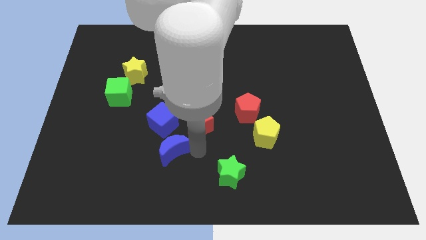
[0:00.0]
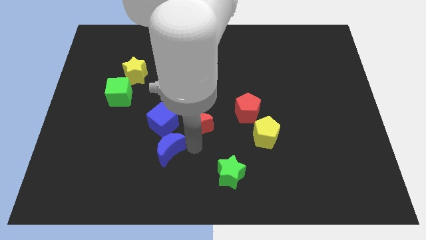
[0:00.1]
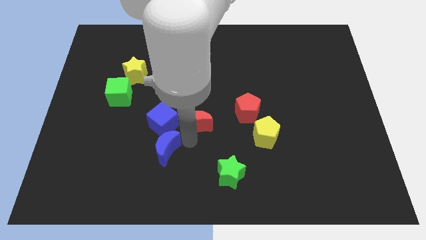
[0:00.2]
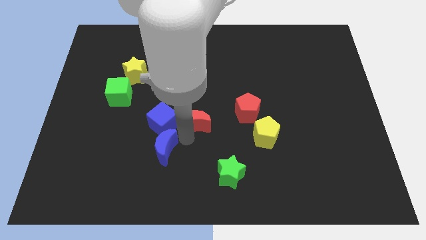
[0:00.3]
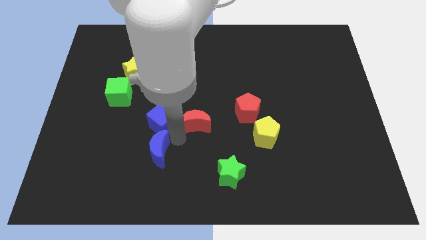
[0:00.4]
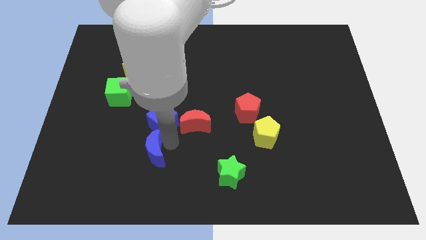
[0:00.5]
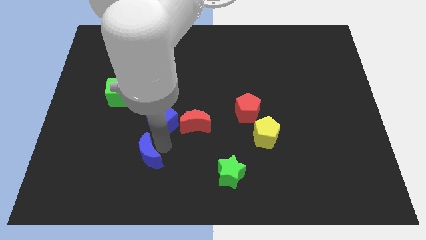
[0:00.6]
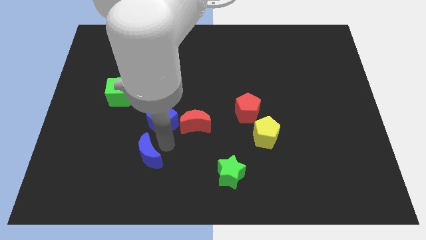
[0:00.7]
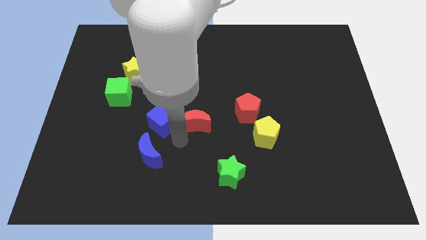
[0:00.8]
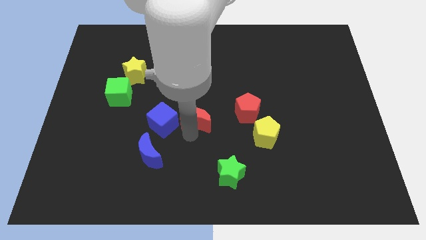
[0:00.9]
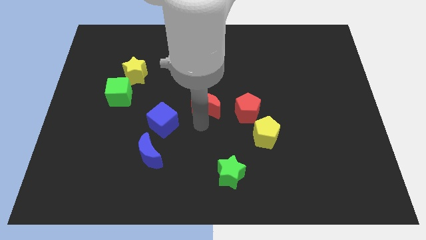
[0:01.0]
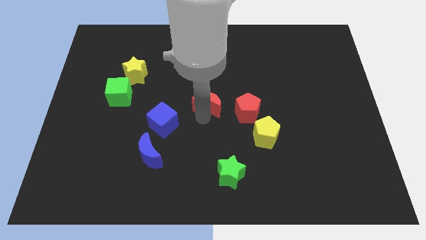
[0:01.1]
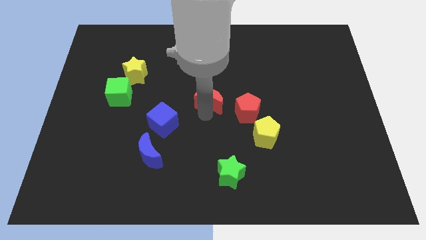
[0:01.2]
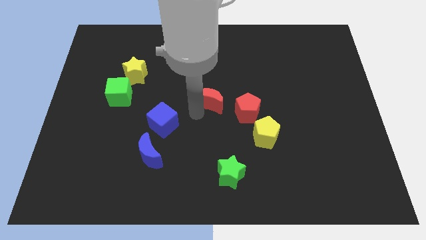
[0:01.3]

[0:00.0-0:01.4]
separate the crescents

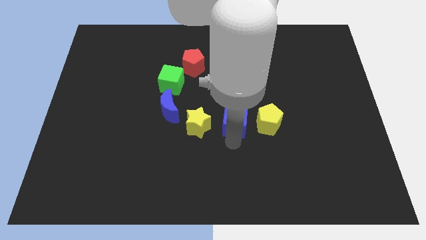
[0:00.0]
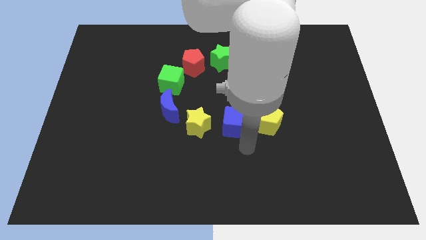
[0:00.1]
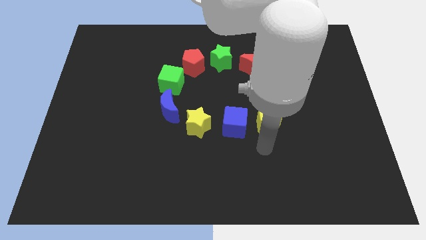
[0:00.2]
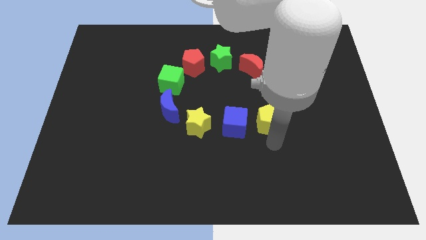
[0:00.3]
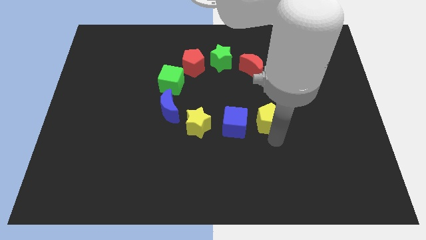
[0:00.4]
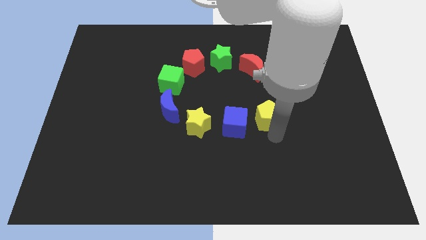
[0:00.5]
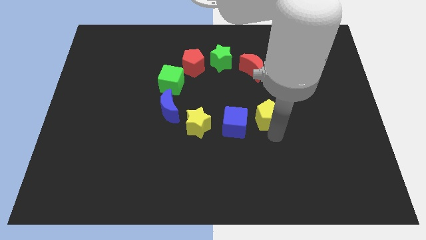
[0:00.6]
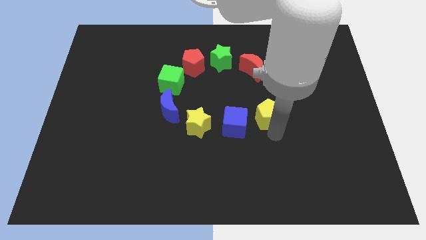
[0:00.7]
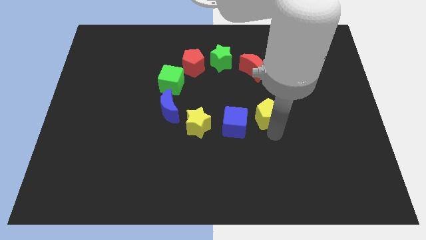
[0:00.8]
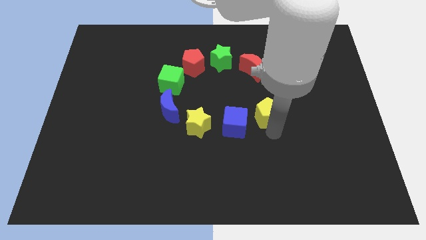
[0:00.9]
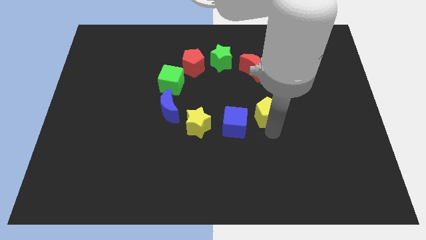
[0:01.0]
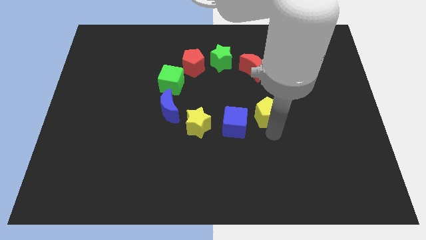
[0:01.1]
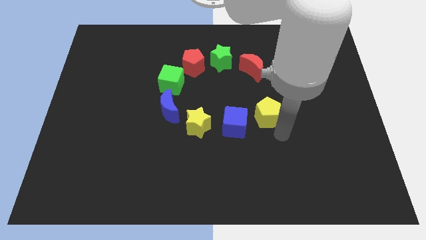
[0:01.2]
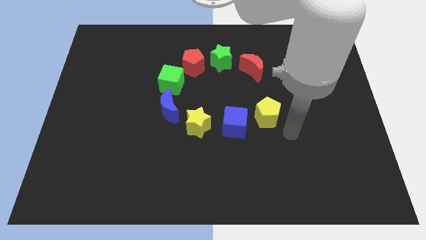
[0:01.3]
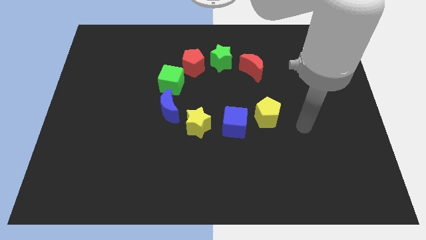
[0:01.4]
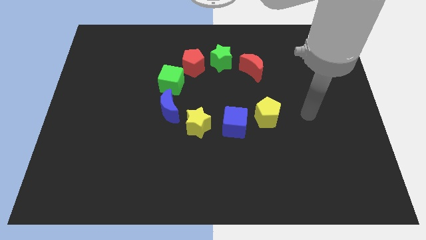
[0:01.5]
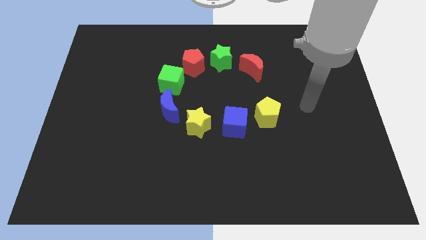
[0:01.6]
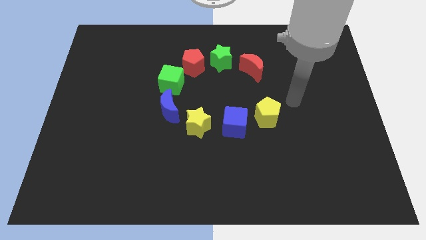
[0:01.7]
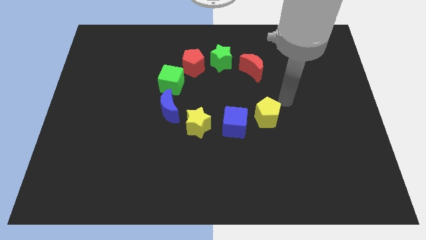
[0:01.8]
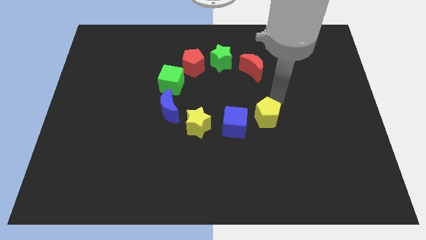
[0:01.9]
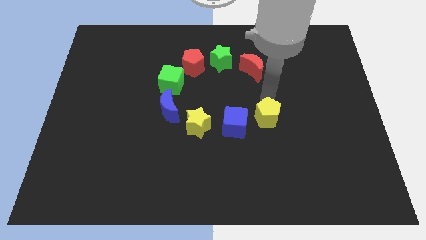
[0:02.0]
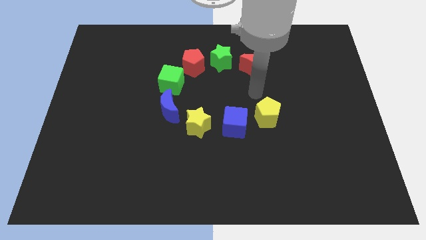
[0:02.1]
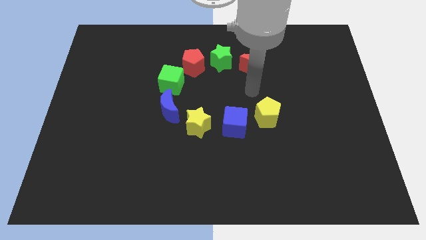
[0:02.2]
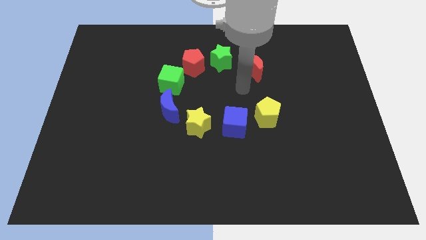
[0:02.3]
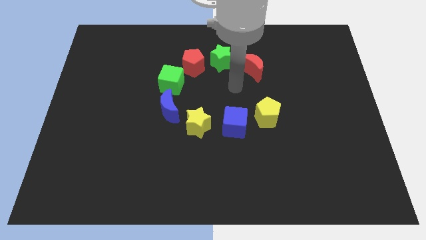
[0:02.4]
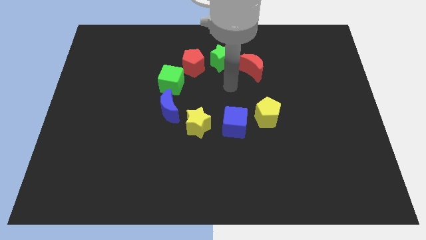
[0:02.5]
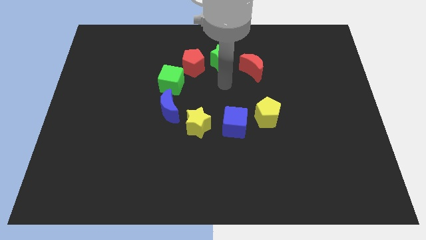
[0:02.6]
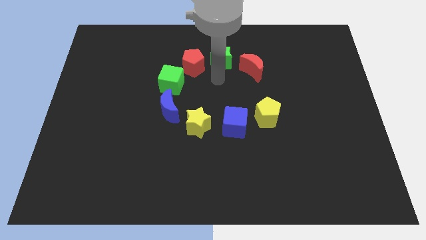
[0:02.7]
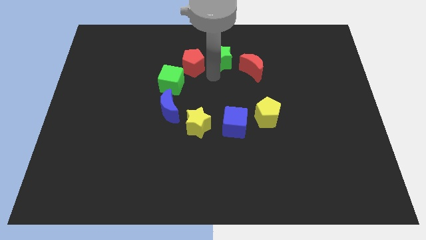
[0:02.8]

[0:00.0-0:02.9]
slightly touch the yellow pentagon

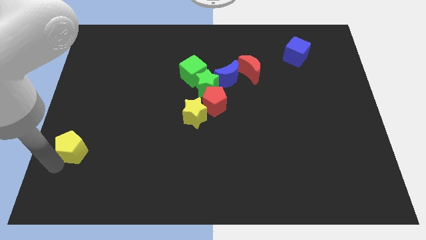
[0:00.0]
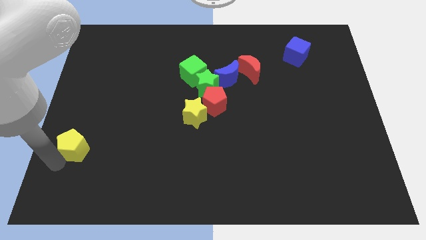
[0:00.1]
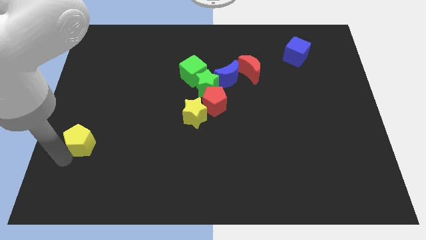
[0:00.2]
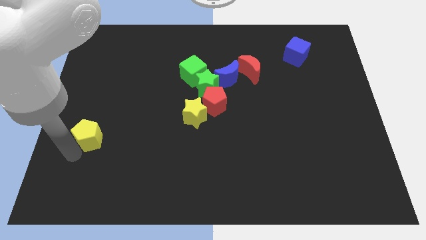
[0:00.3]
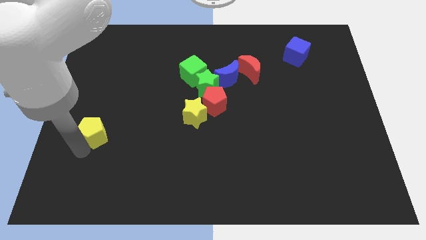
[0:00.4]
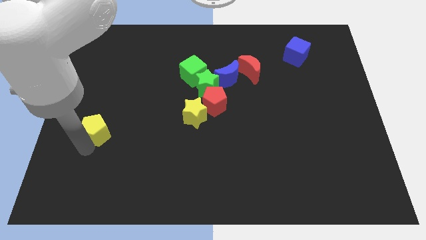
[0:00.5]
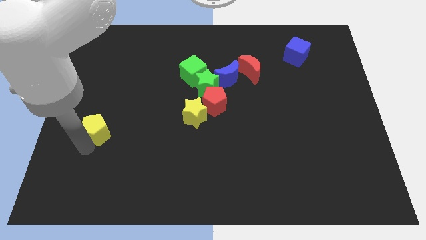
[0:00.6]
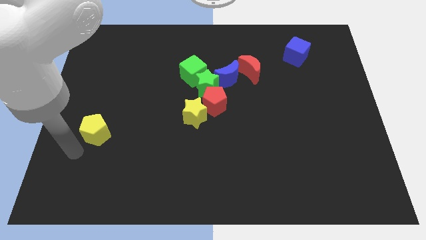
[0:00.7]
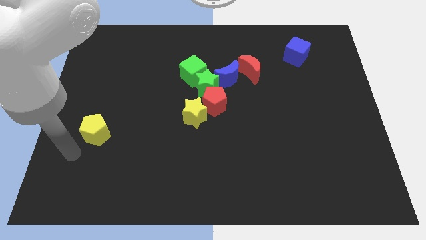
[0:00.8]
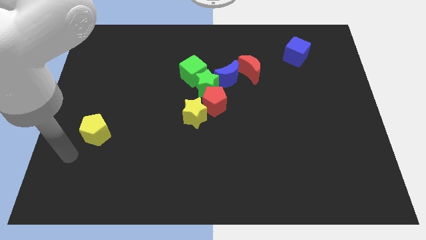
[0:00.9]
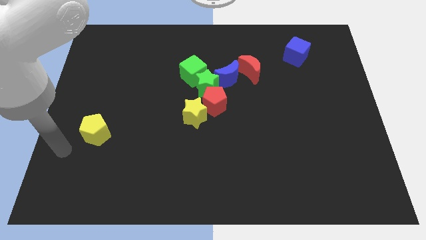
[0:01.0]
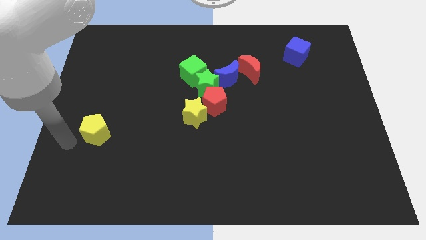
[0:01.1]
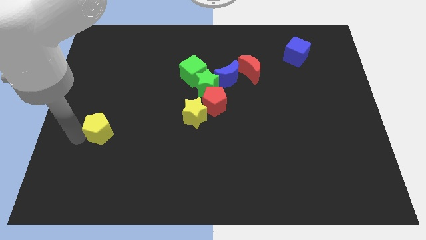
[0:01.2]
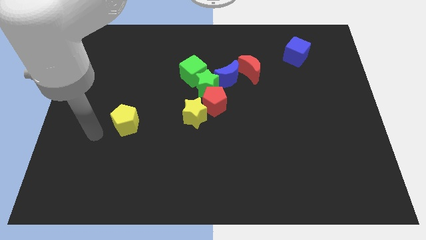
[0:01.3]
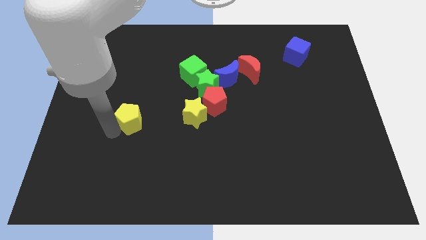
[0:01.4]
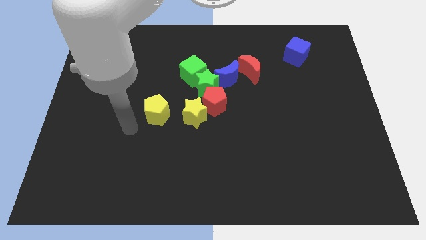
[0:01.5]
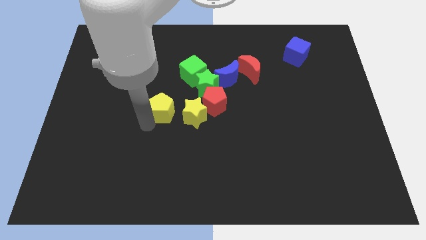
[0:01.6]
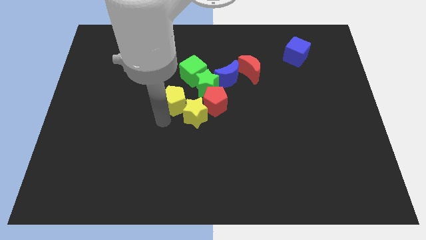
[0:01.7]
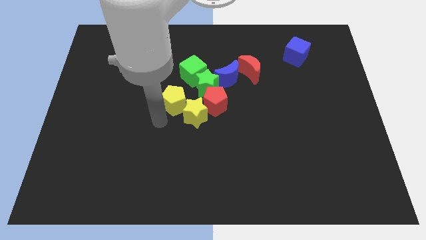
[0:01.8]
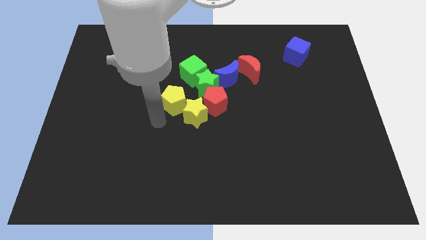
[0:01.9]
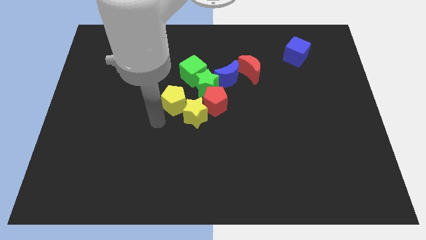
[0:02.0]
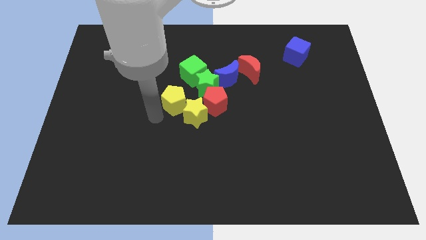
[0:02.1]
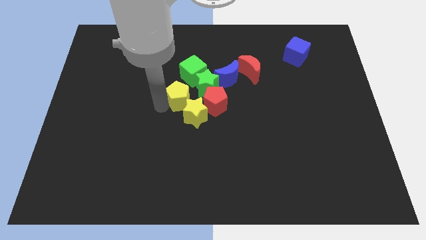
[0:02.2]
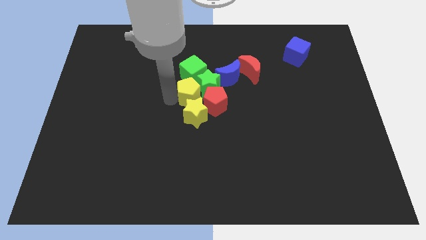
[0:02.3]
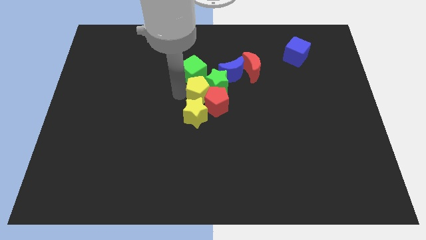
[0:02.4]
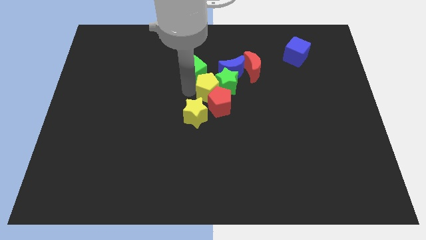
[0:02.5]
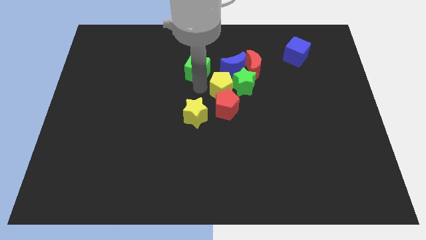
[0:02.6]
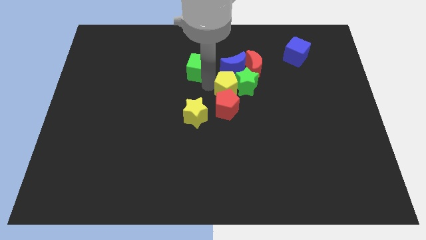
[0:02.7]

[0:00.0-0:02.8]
push the yellow pentagon into the group of blocks

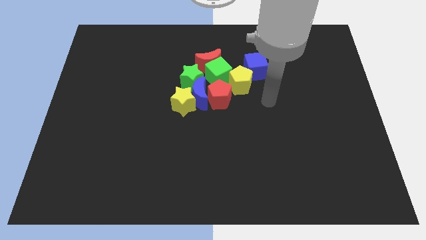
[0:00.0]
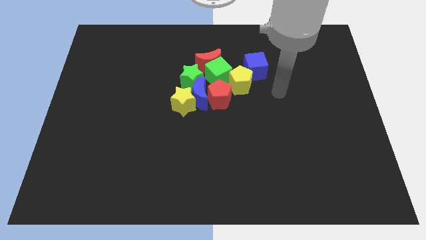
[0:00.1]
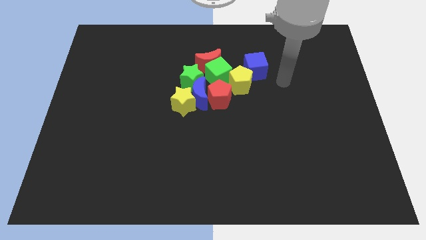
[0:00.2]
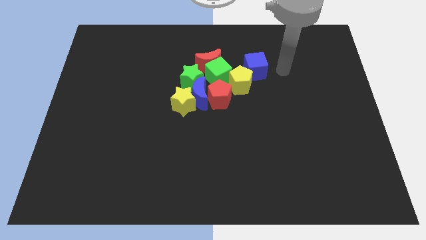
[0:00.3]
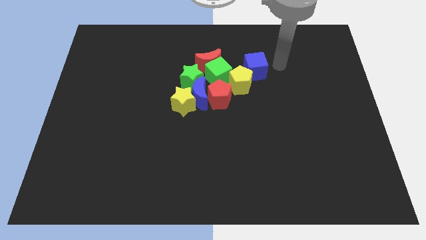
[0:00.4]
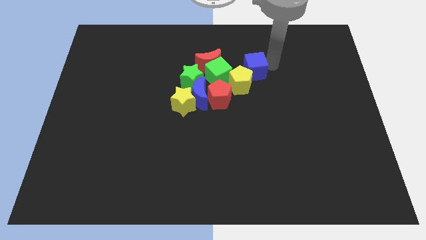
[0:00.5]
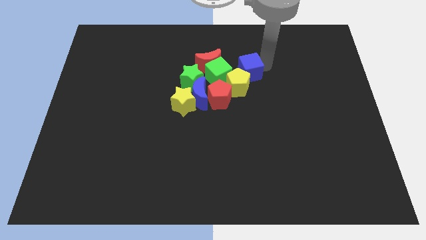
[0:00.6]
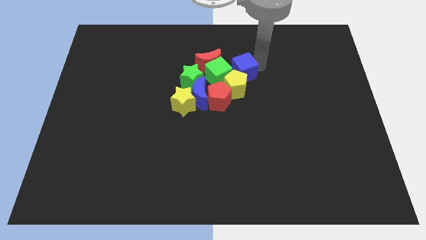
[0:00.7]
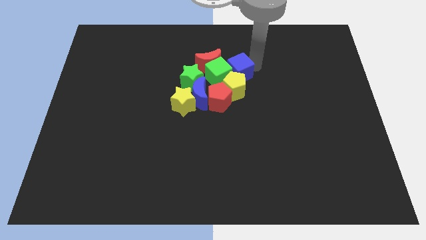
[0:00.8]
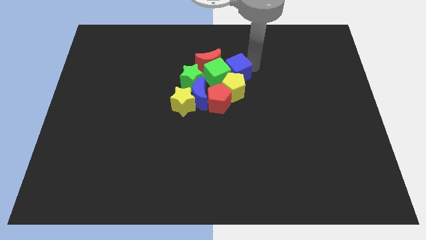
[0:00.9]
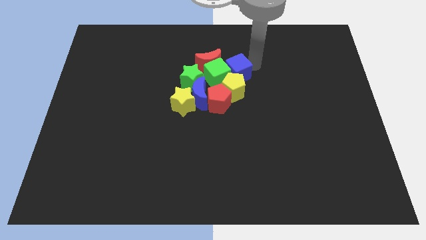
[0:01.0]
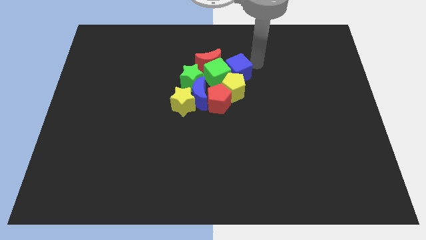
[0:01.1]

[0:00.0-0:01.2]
move the blue cube into the green cube

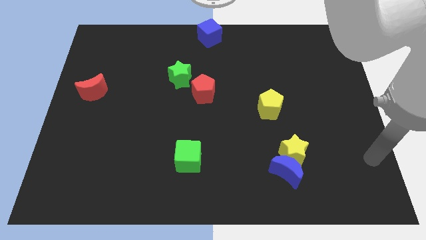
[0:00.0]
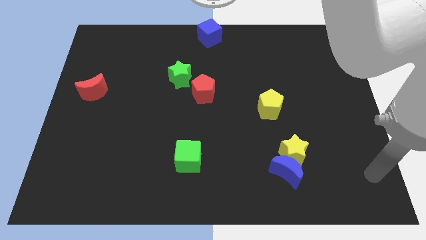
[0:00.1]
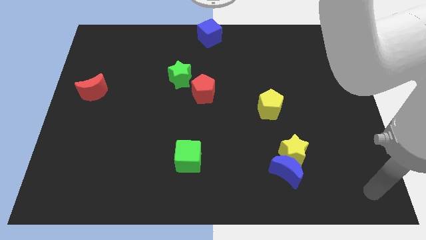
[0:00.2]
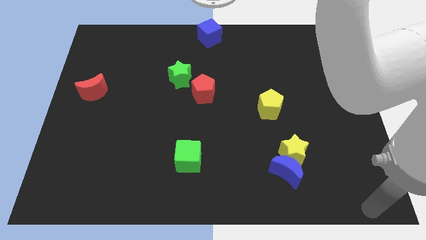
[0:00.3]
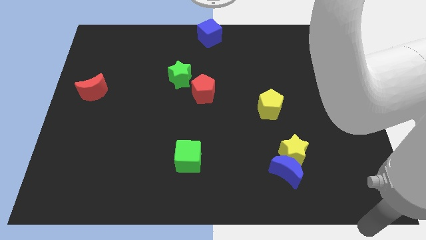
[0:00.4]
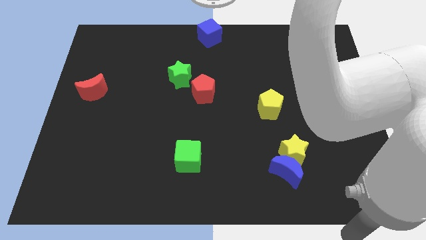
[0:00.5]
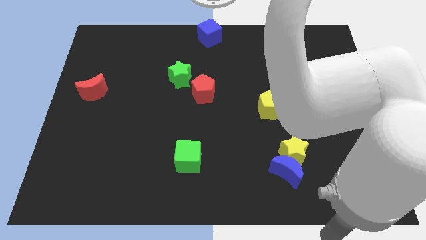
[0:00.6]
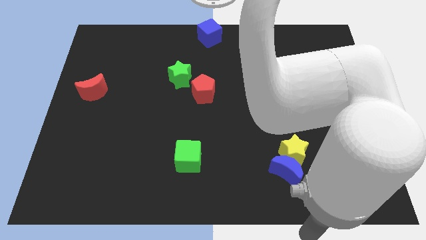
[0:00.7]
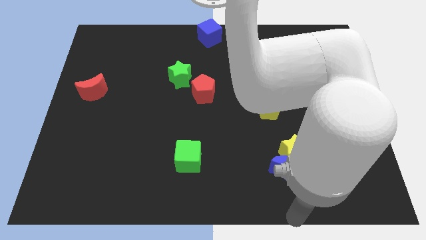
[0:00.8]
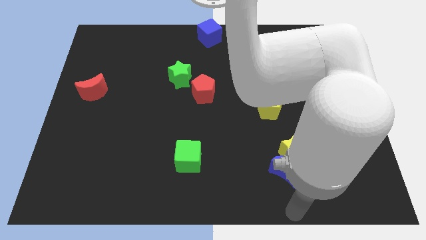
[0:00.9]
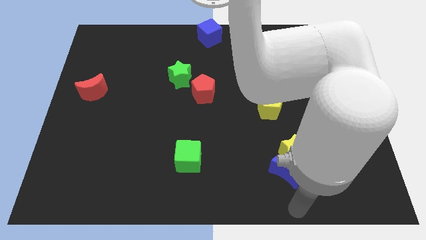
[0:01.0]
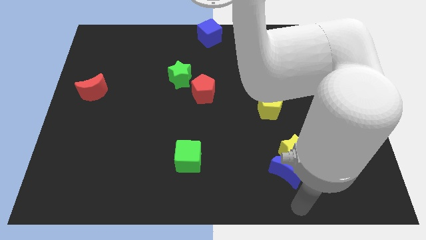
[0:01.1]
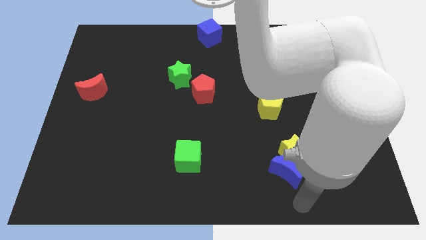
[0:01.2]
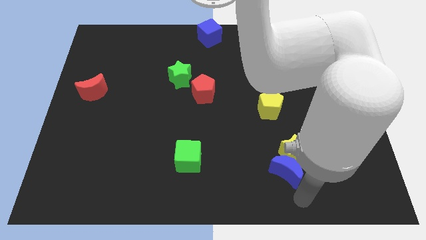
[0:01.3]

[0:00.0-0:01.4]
move your arm to the bottom of blue moon
